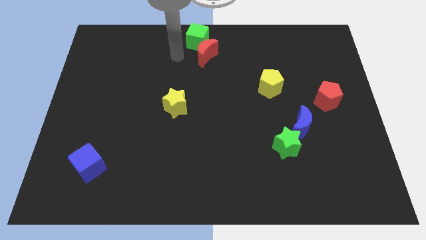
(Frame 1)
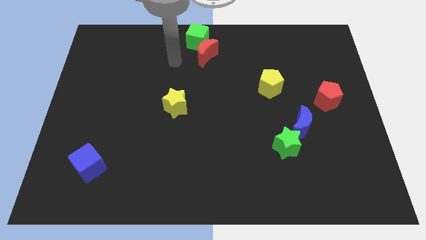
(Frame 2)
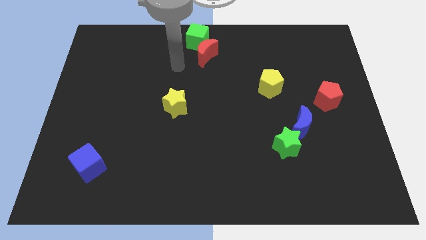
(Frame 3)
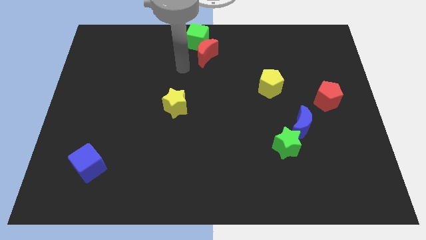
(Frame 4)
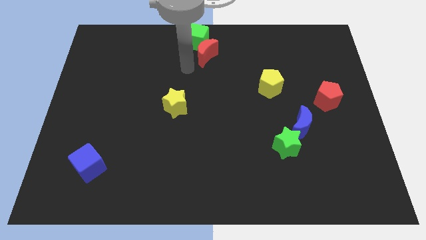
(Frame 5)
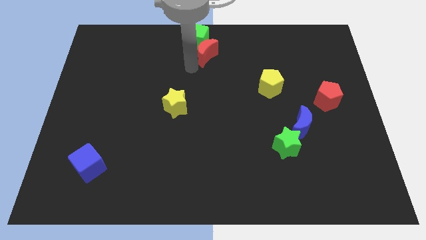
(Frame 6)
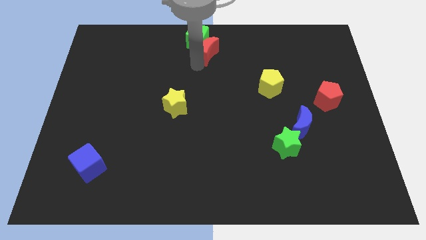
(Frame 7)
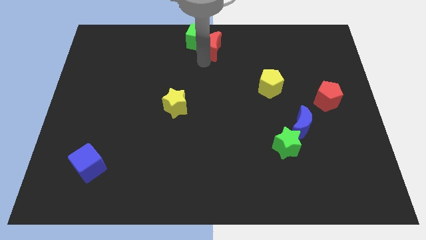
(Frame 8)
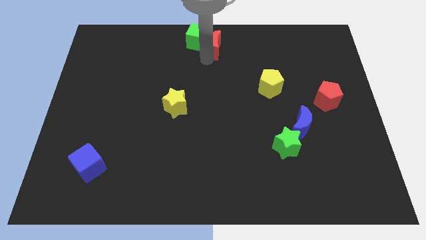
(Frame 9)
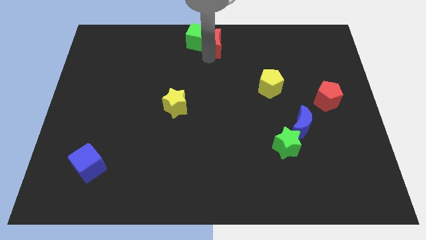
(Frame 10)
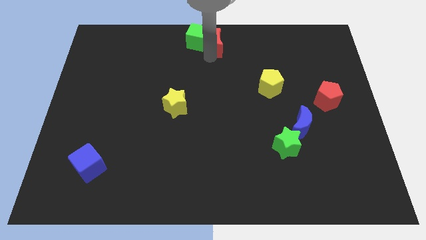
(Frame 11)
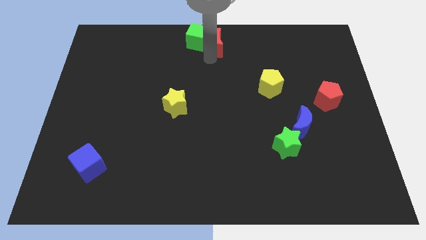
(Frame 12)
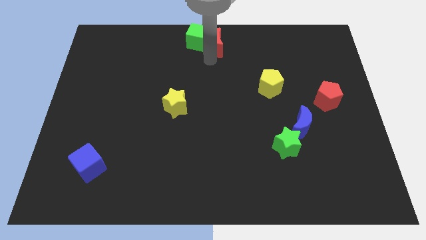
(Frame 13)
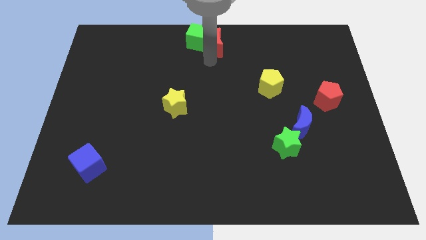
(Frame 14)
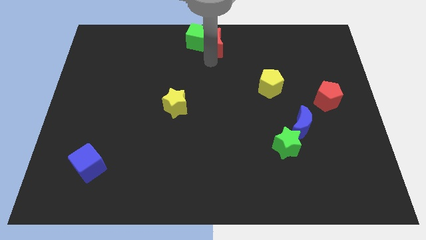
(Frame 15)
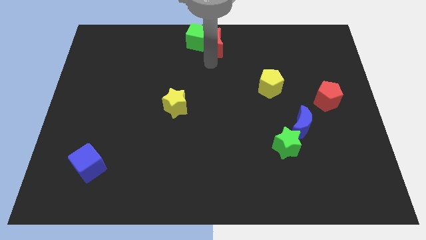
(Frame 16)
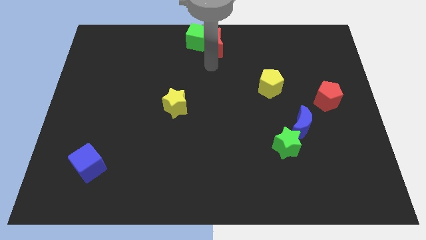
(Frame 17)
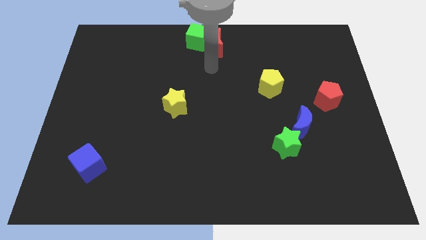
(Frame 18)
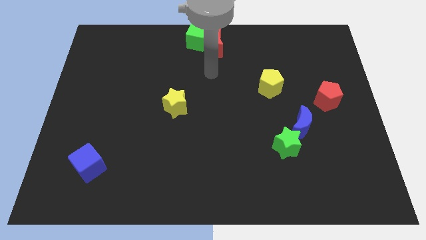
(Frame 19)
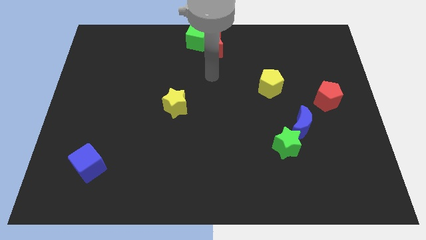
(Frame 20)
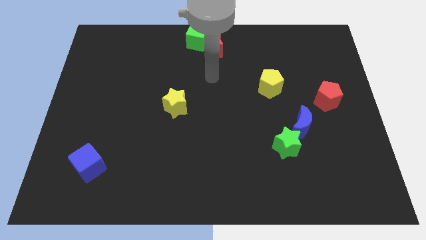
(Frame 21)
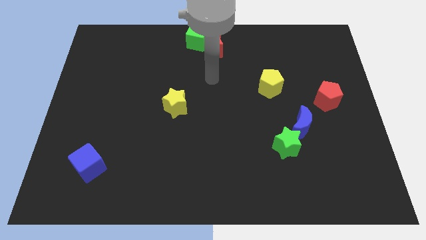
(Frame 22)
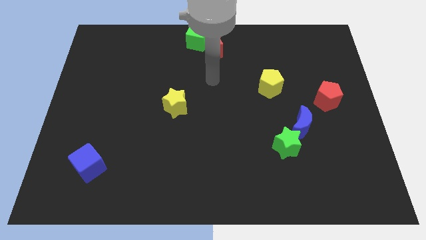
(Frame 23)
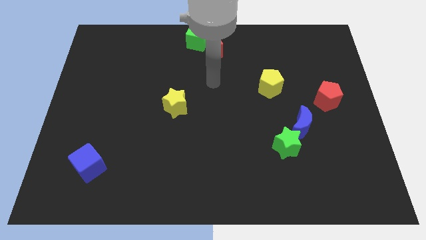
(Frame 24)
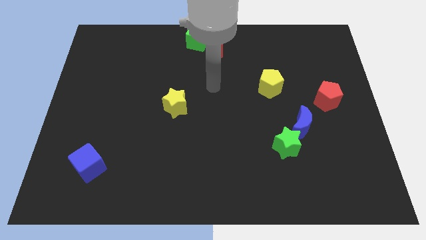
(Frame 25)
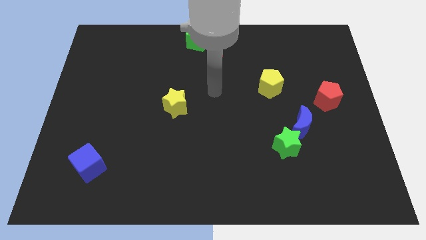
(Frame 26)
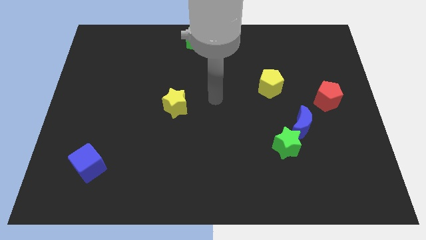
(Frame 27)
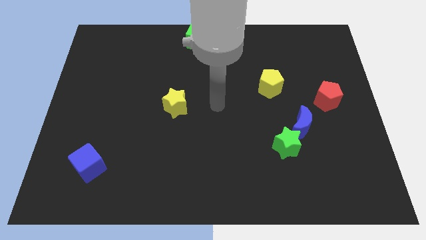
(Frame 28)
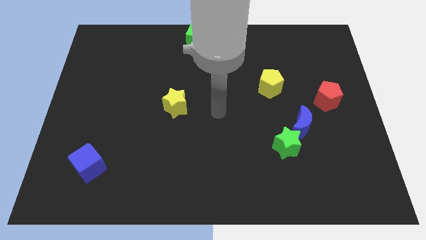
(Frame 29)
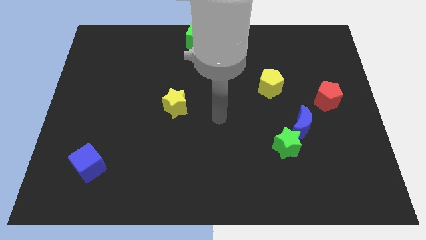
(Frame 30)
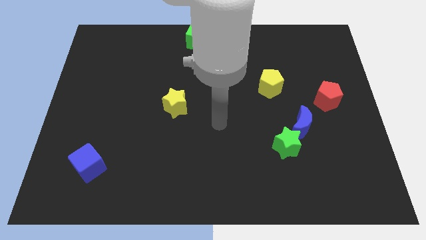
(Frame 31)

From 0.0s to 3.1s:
put the red moon at the top center of the board

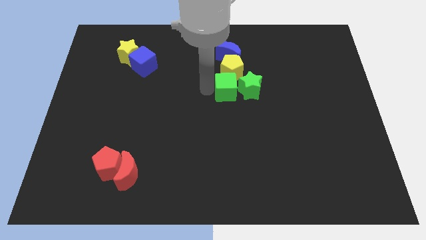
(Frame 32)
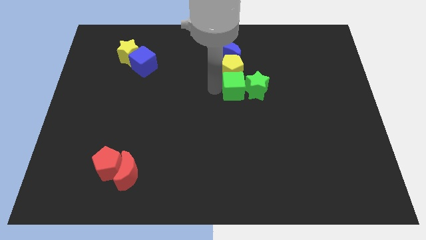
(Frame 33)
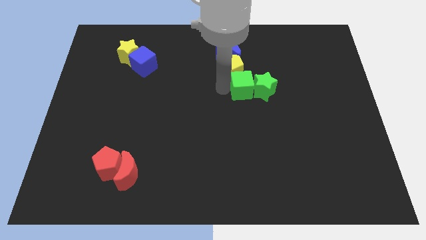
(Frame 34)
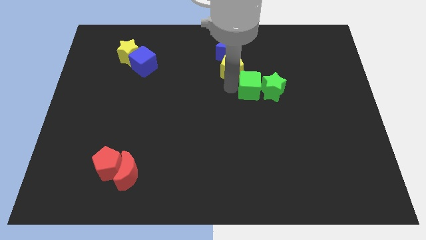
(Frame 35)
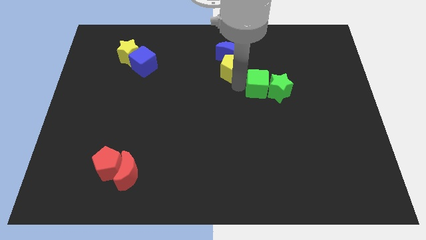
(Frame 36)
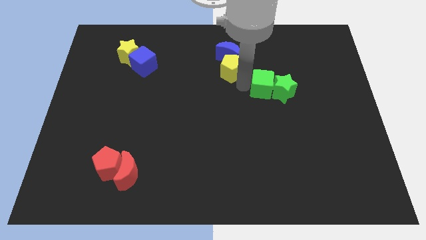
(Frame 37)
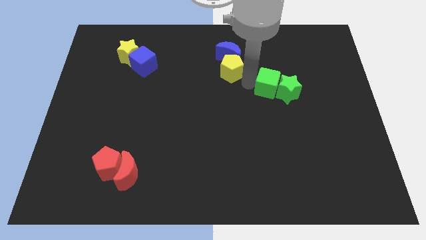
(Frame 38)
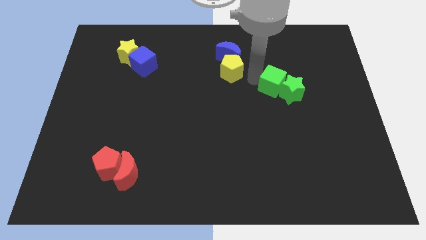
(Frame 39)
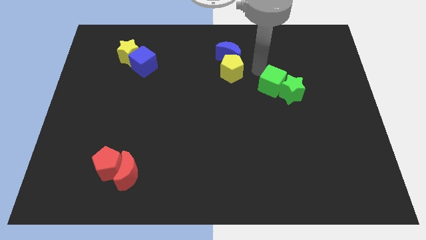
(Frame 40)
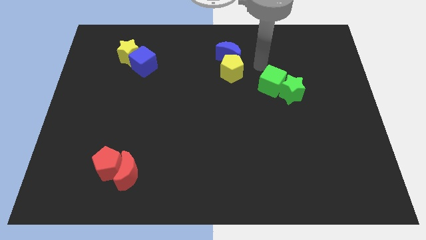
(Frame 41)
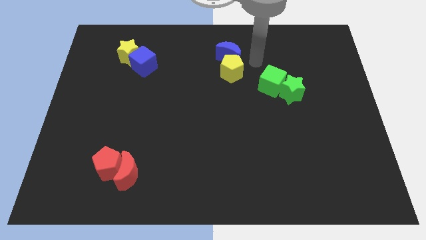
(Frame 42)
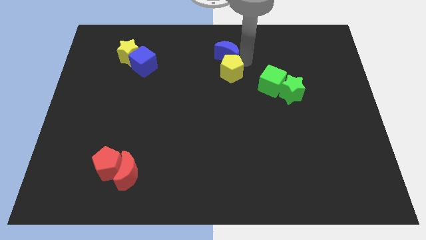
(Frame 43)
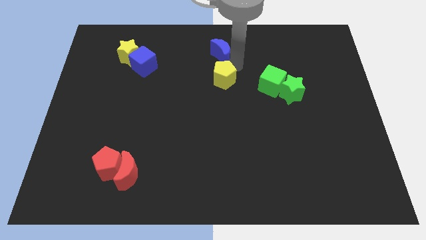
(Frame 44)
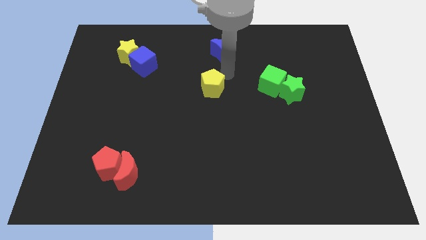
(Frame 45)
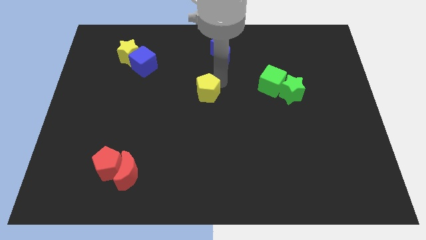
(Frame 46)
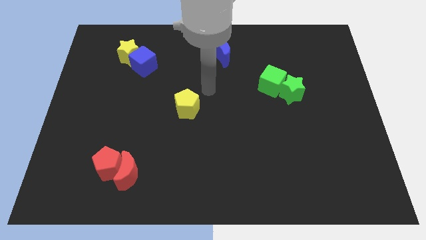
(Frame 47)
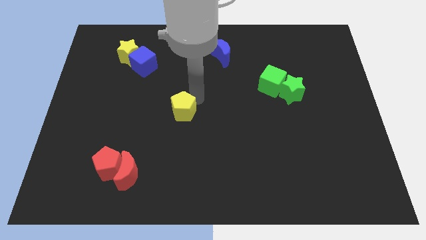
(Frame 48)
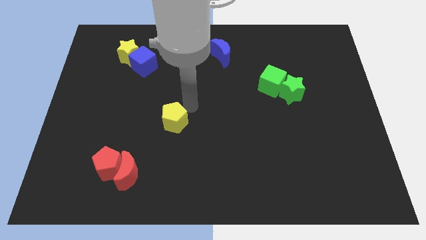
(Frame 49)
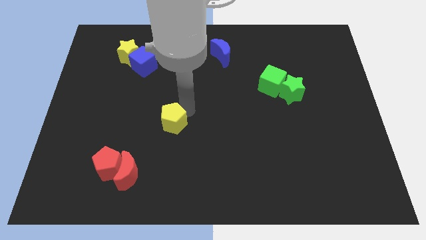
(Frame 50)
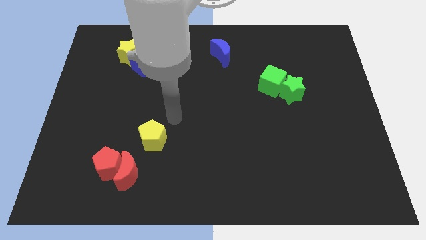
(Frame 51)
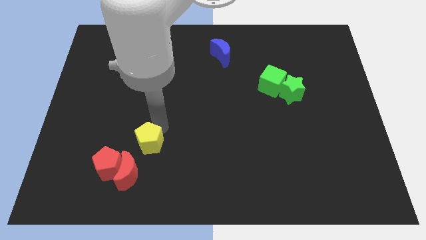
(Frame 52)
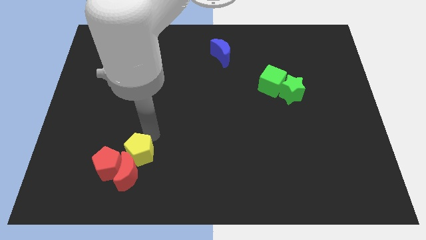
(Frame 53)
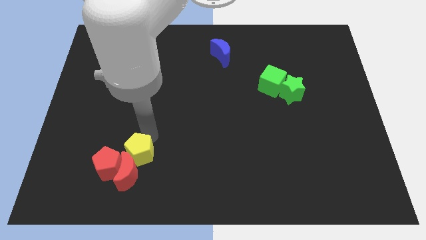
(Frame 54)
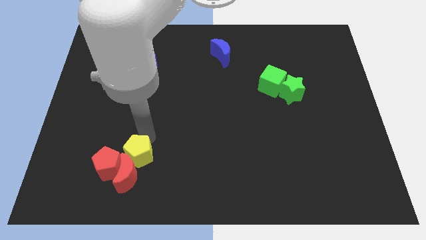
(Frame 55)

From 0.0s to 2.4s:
move the yellow pentagon to the red blocks

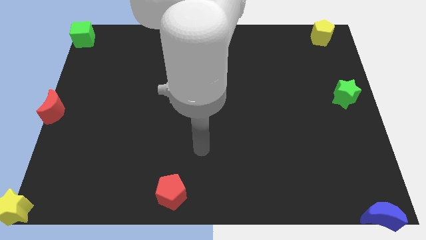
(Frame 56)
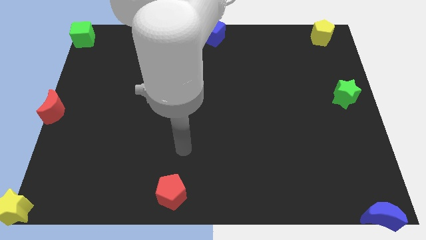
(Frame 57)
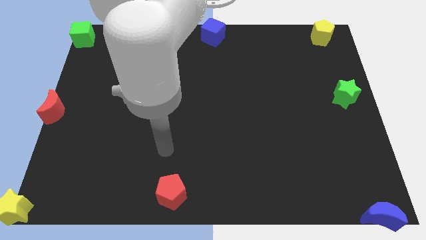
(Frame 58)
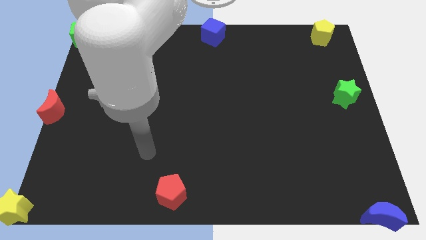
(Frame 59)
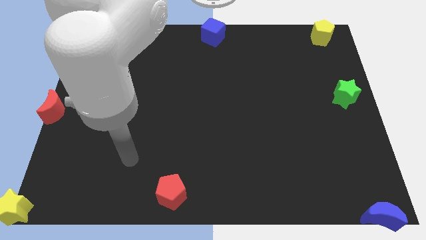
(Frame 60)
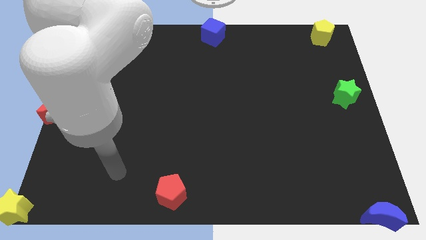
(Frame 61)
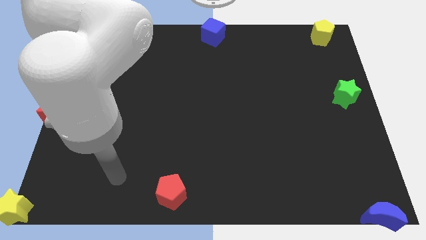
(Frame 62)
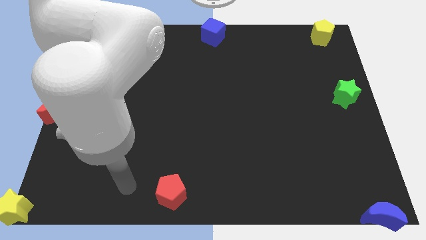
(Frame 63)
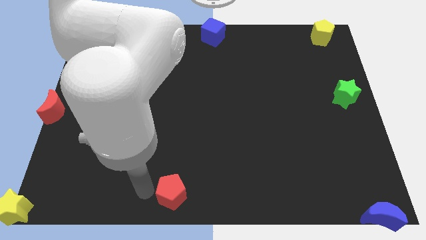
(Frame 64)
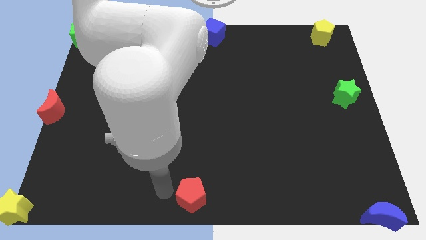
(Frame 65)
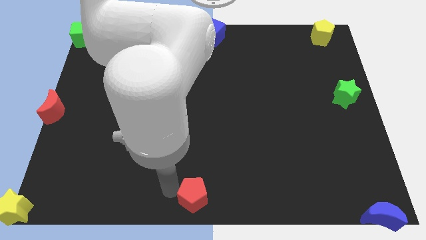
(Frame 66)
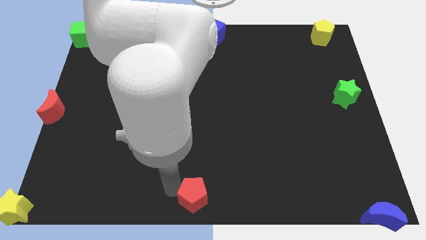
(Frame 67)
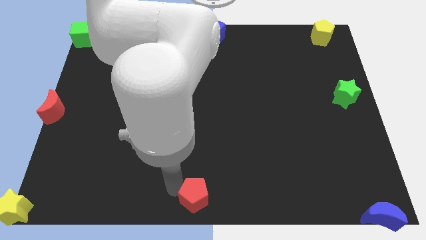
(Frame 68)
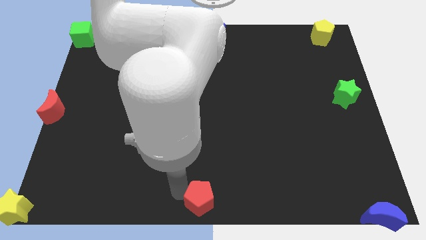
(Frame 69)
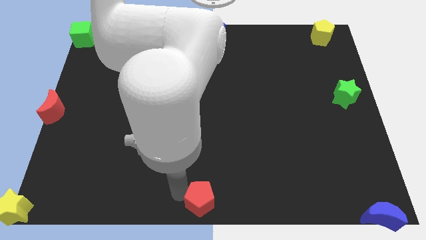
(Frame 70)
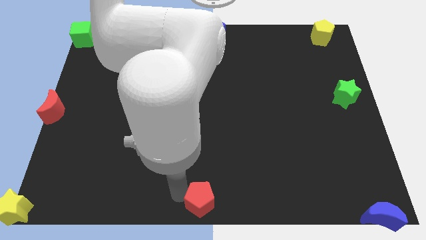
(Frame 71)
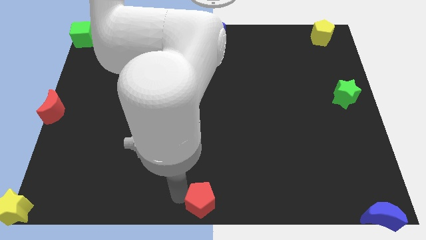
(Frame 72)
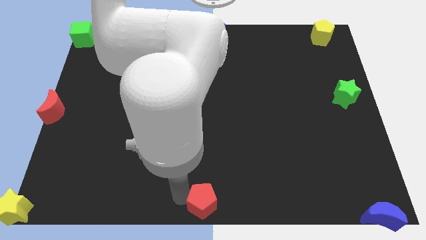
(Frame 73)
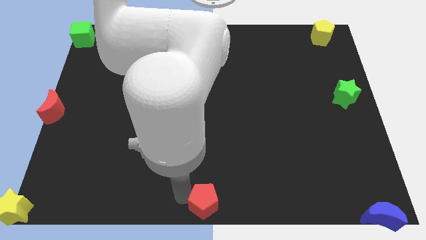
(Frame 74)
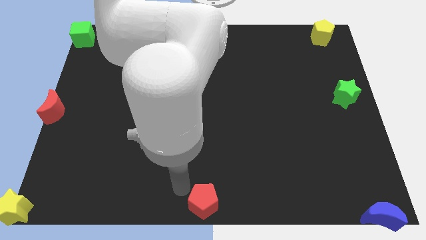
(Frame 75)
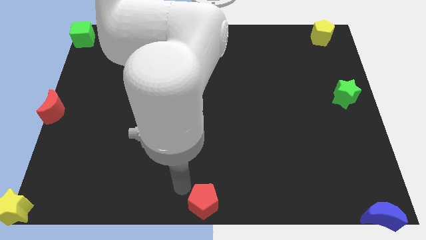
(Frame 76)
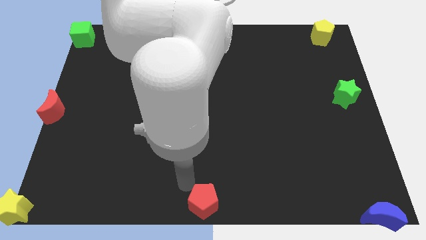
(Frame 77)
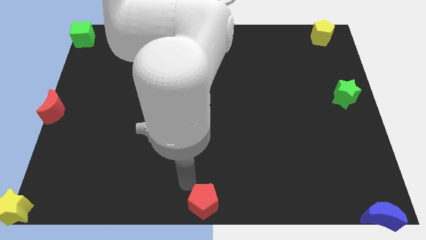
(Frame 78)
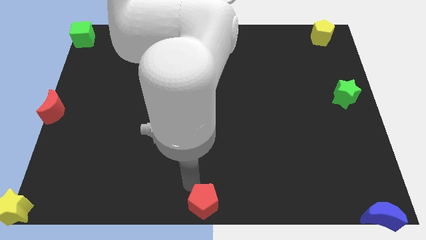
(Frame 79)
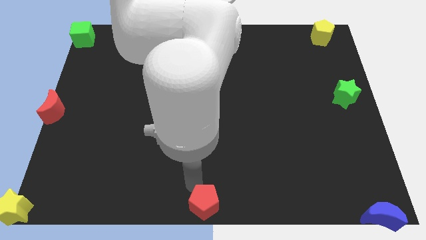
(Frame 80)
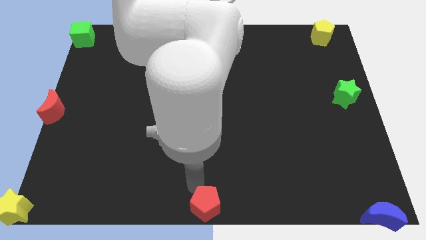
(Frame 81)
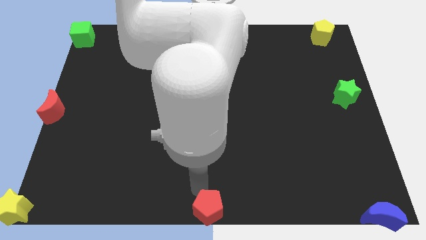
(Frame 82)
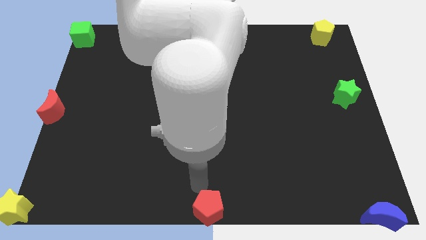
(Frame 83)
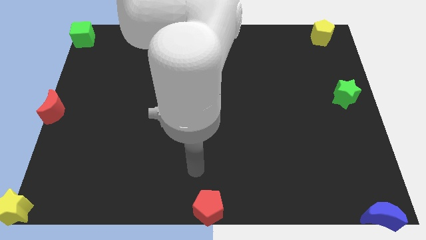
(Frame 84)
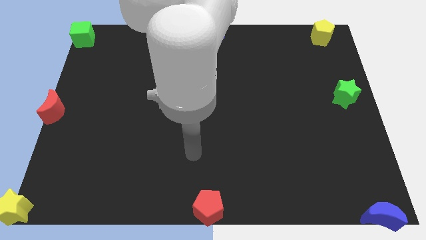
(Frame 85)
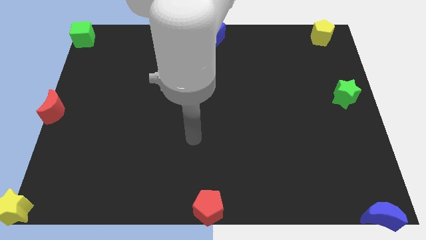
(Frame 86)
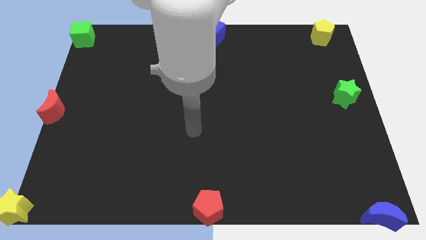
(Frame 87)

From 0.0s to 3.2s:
put the red pentagon in between the yellow star and the blue crescent

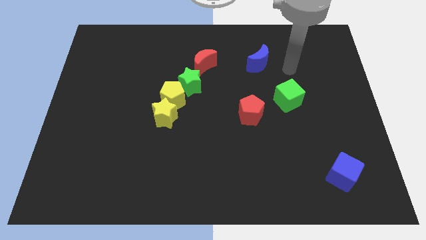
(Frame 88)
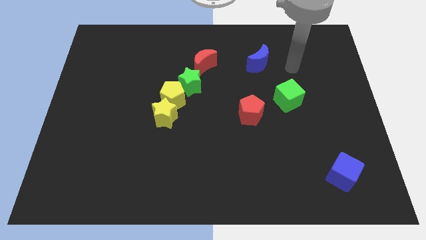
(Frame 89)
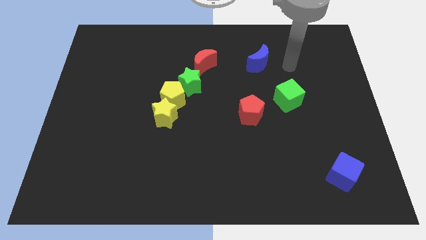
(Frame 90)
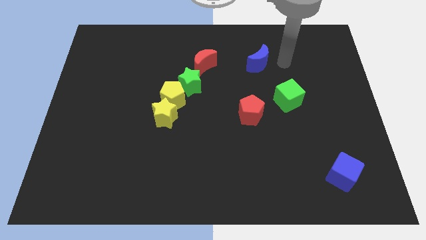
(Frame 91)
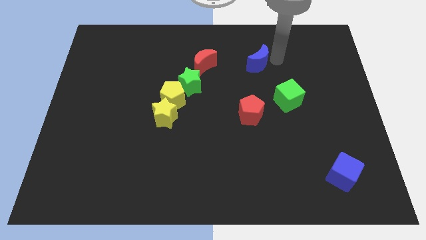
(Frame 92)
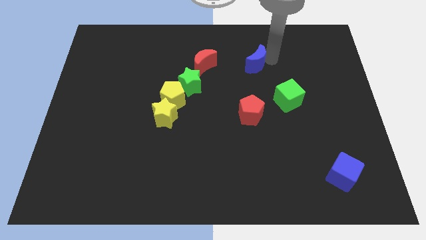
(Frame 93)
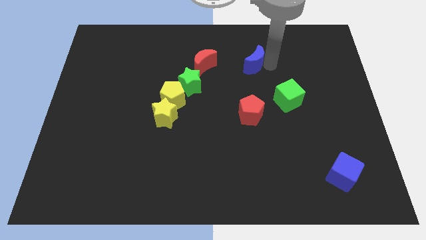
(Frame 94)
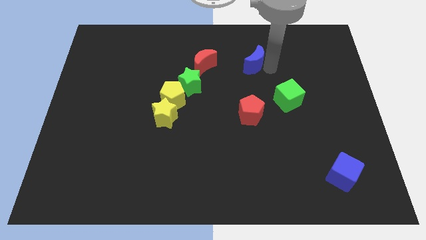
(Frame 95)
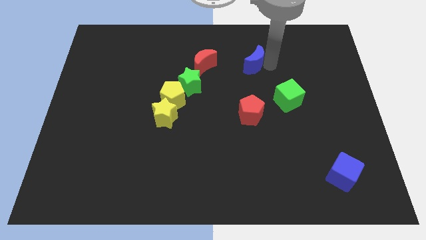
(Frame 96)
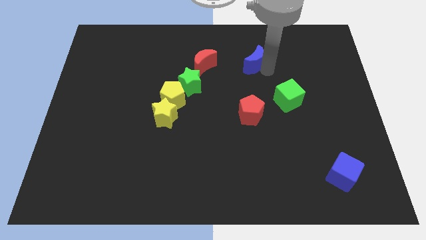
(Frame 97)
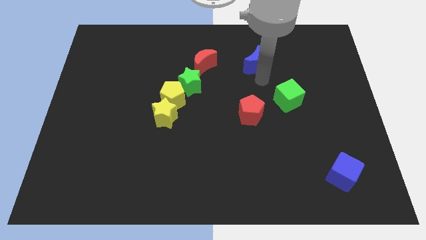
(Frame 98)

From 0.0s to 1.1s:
move blue moon vertically above red pentagon
